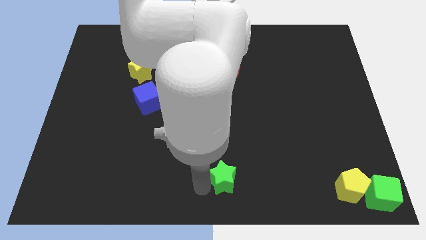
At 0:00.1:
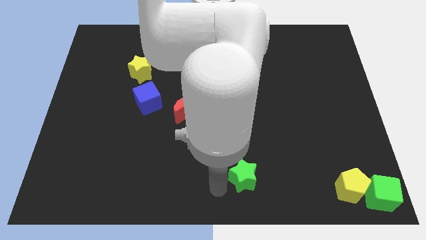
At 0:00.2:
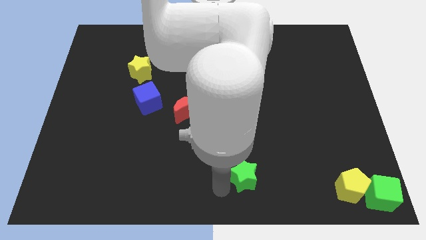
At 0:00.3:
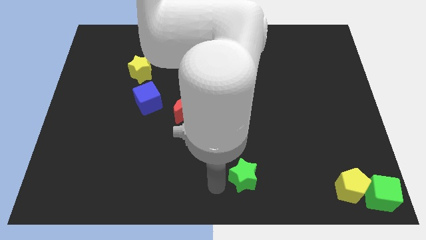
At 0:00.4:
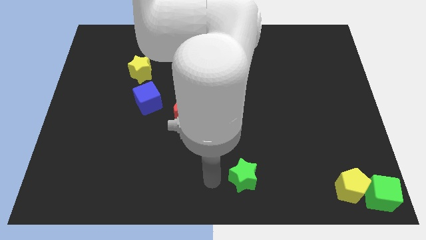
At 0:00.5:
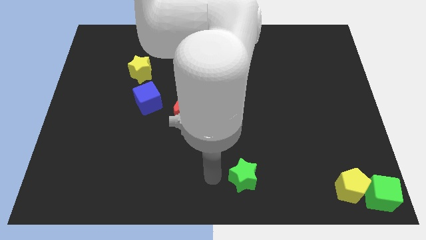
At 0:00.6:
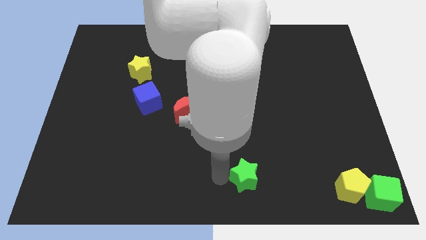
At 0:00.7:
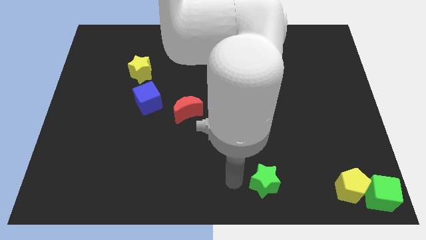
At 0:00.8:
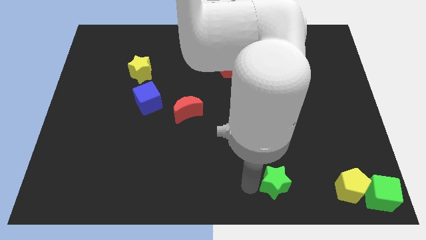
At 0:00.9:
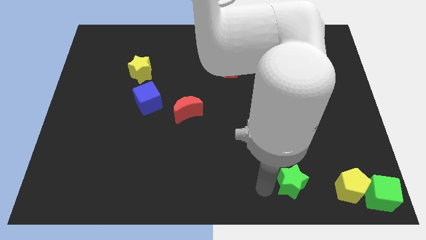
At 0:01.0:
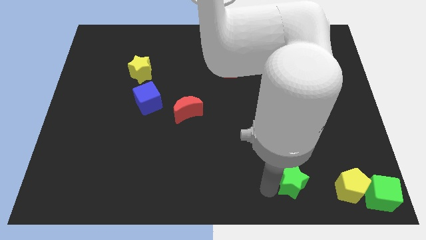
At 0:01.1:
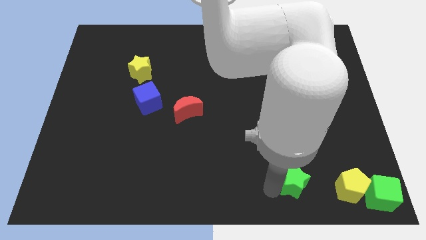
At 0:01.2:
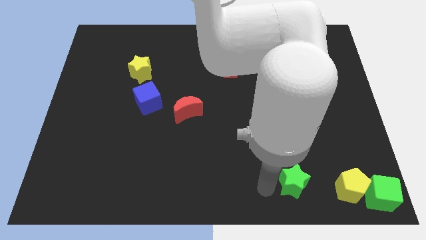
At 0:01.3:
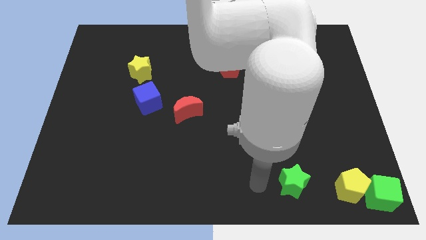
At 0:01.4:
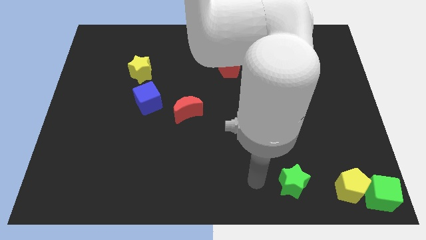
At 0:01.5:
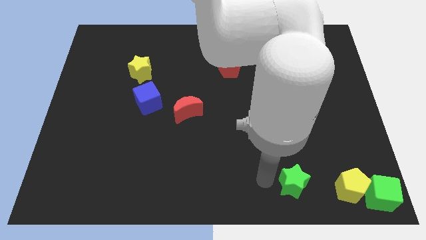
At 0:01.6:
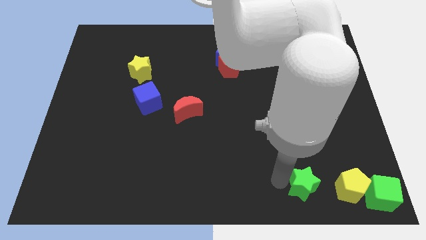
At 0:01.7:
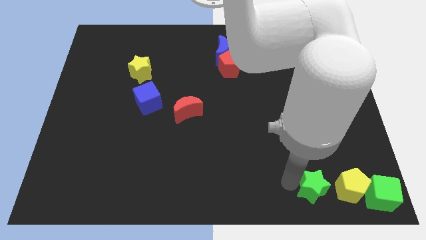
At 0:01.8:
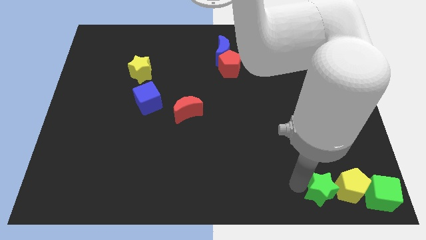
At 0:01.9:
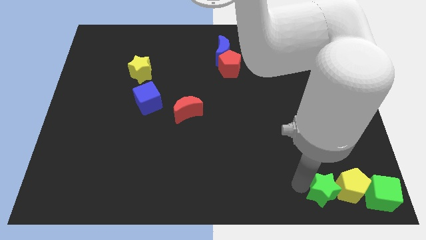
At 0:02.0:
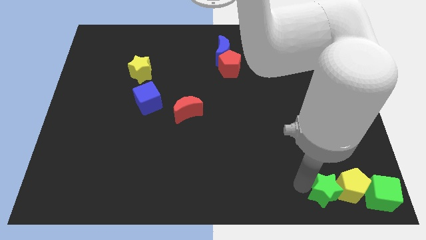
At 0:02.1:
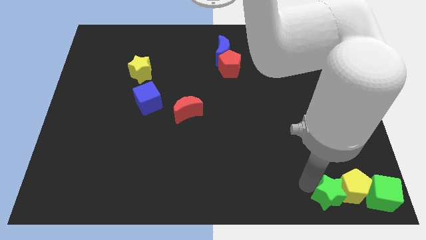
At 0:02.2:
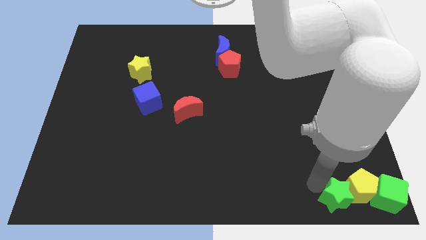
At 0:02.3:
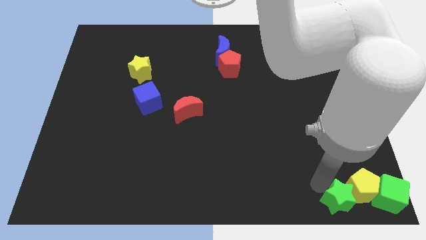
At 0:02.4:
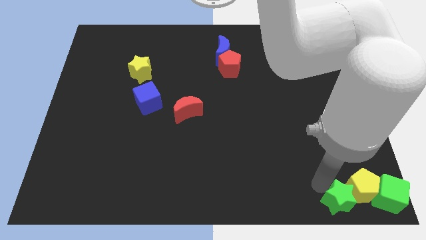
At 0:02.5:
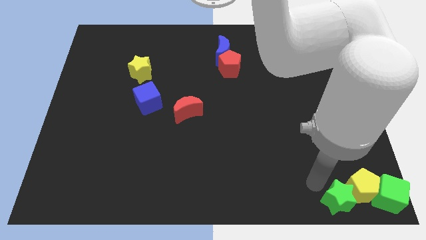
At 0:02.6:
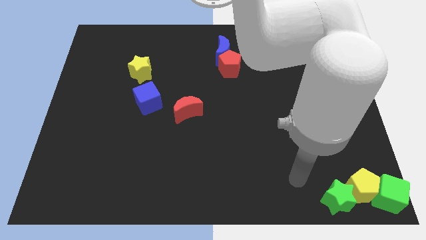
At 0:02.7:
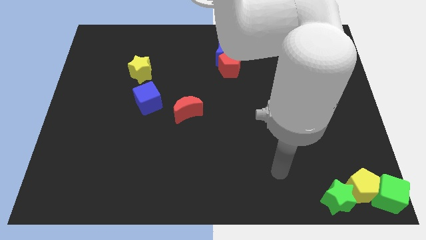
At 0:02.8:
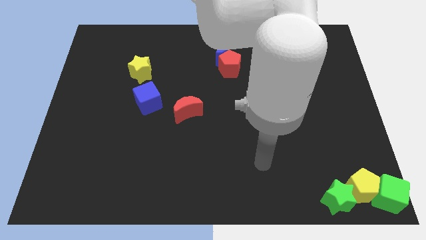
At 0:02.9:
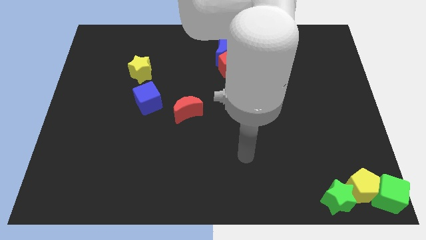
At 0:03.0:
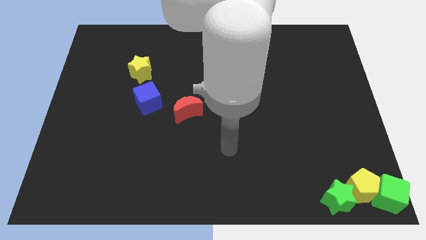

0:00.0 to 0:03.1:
place green star beside yellow pentagon

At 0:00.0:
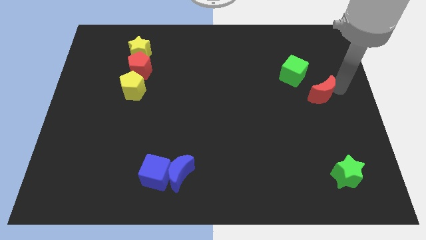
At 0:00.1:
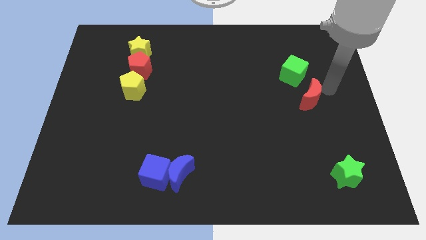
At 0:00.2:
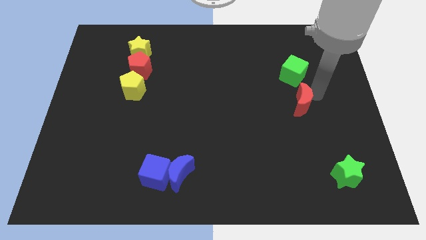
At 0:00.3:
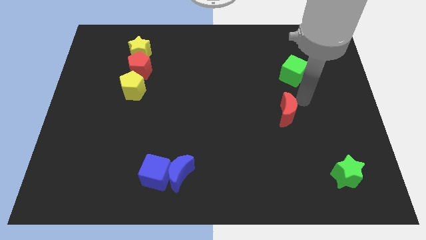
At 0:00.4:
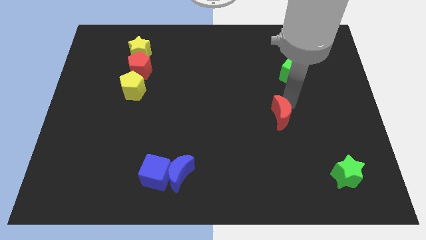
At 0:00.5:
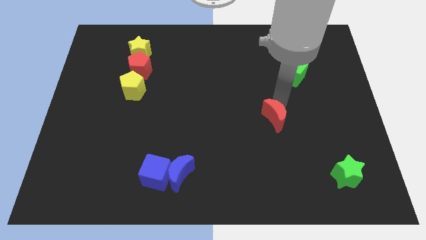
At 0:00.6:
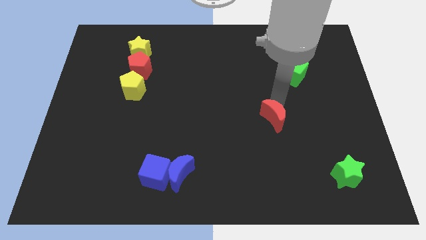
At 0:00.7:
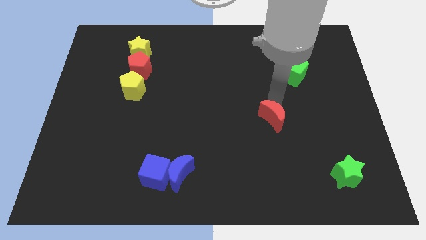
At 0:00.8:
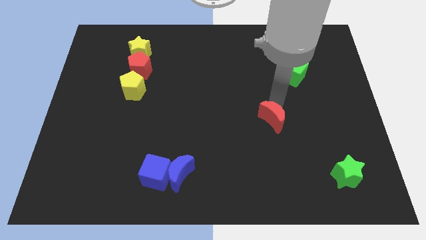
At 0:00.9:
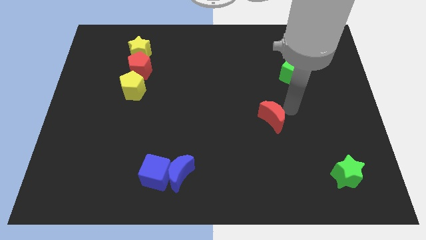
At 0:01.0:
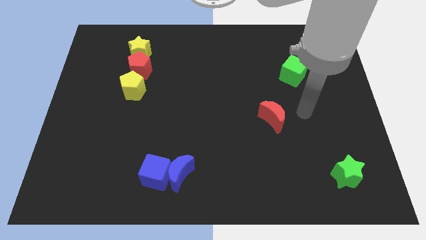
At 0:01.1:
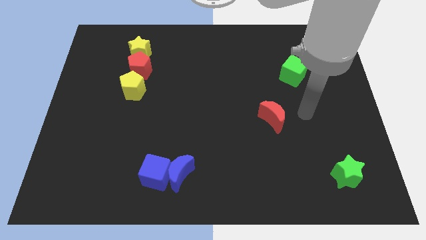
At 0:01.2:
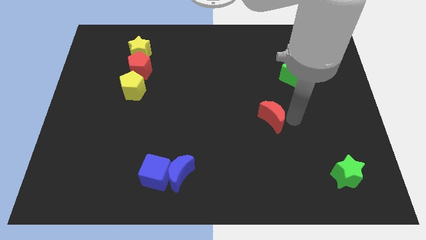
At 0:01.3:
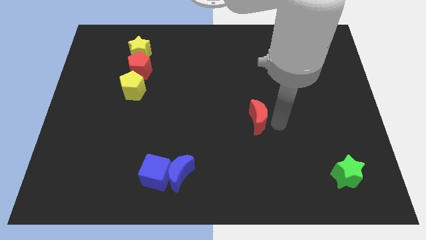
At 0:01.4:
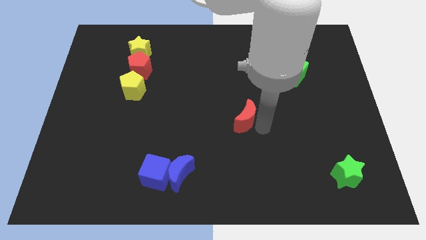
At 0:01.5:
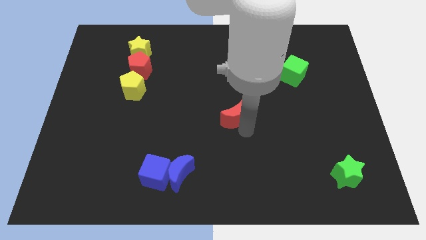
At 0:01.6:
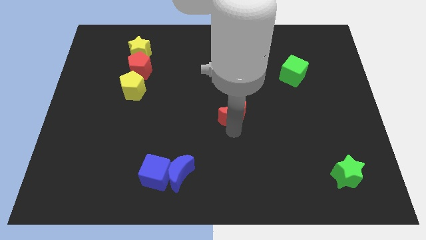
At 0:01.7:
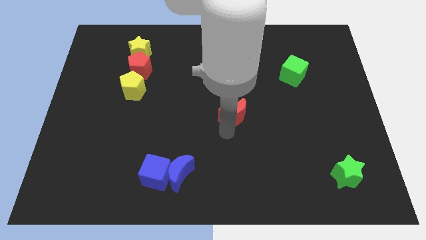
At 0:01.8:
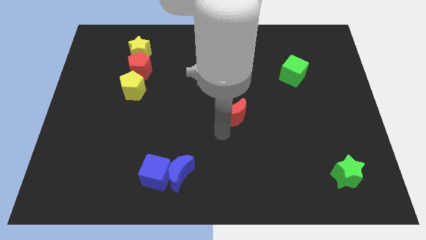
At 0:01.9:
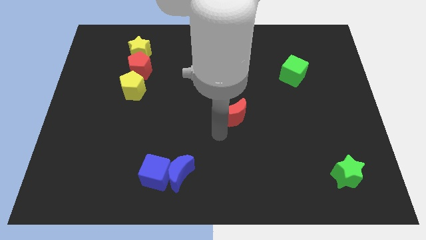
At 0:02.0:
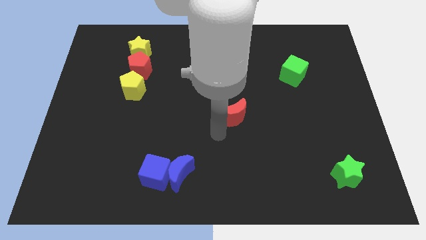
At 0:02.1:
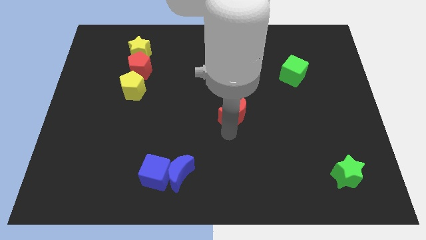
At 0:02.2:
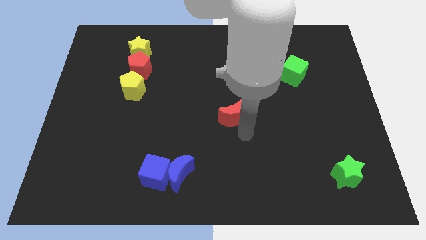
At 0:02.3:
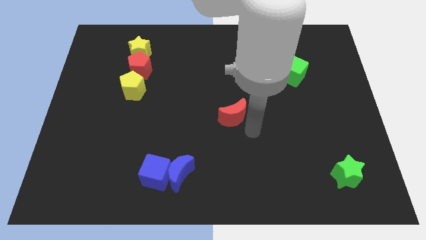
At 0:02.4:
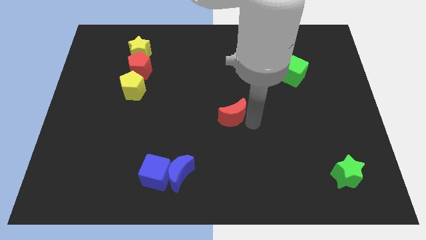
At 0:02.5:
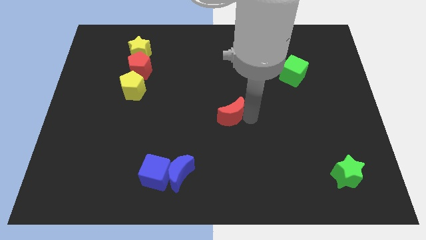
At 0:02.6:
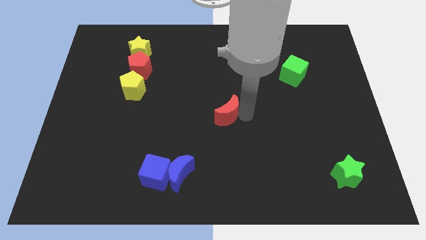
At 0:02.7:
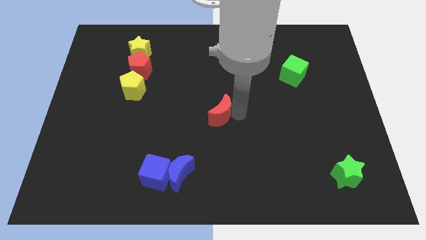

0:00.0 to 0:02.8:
move the red crescent to the center of the board

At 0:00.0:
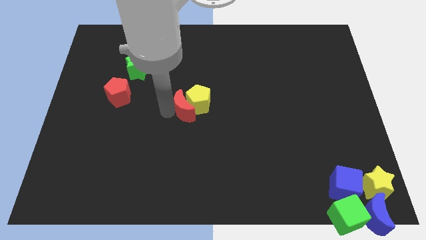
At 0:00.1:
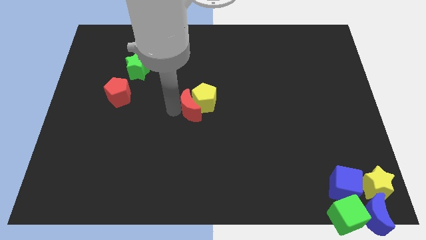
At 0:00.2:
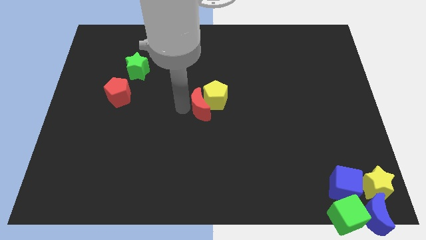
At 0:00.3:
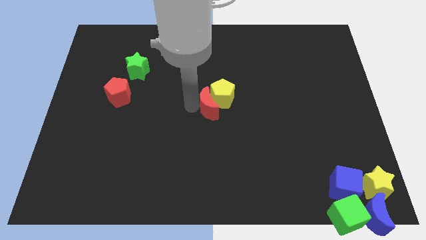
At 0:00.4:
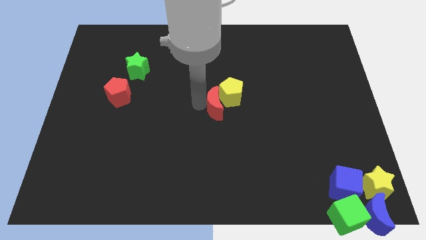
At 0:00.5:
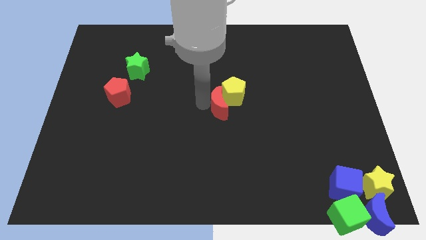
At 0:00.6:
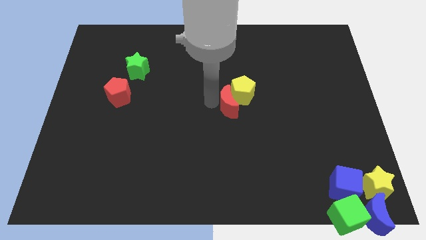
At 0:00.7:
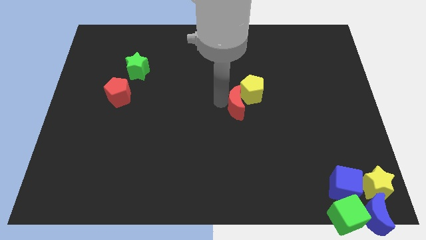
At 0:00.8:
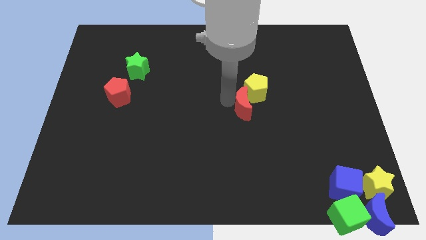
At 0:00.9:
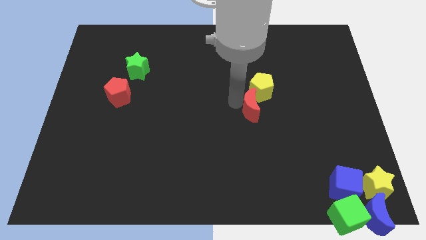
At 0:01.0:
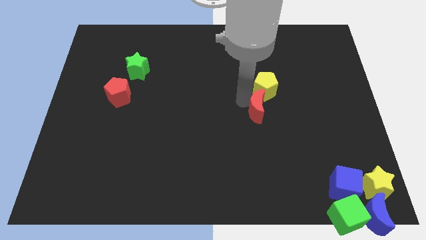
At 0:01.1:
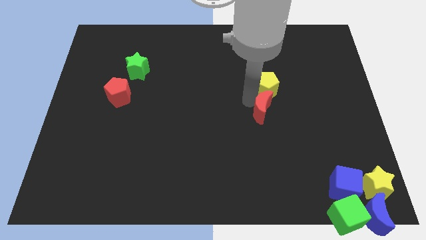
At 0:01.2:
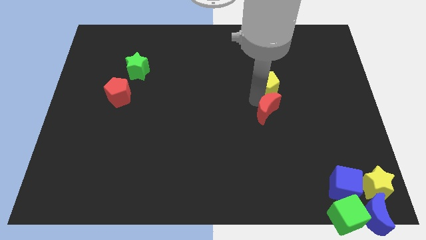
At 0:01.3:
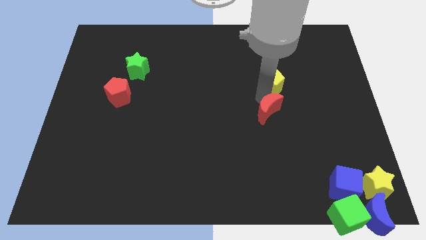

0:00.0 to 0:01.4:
put the red crescent vertically below the yellow pentagon

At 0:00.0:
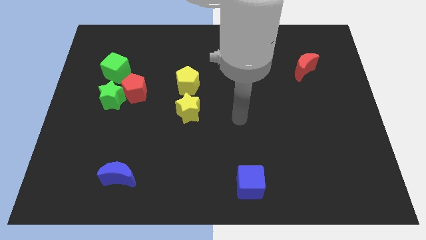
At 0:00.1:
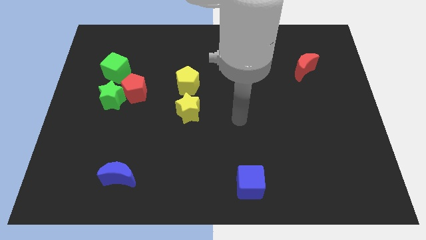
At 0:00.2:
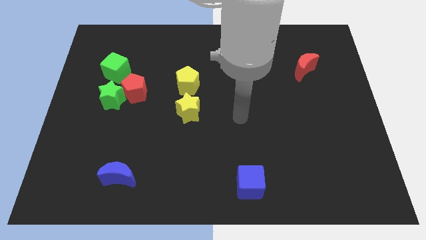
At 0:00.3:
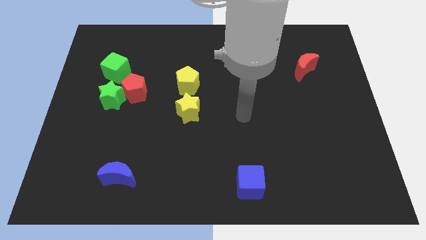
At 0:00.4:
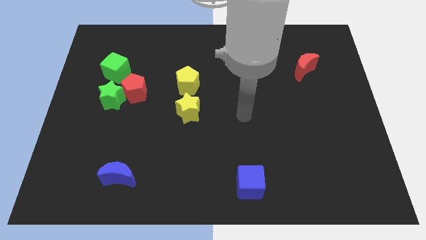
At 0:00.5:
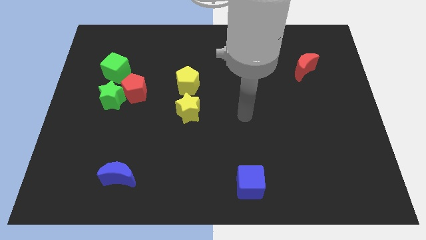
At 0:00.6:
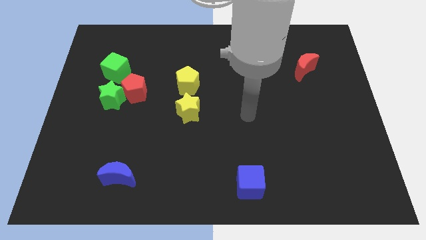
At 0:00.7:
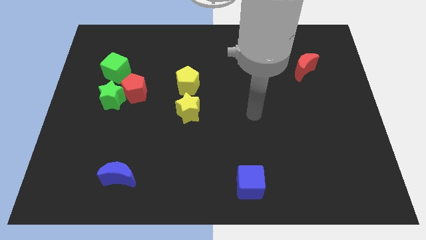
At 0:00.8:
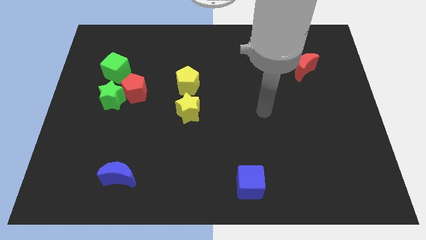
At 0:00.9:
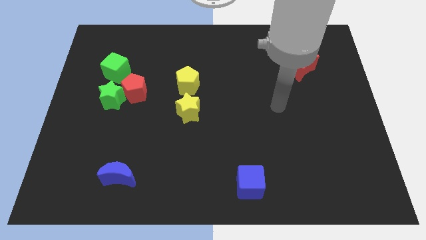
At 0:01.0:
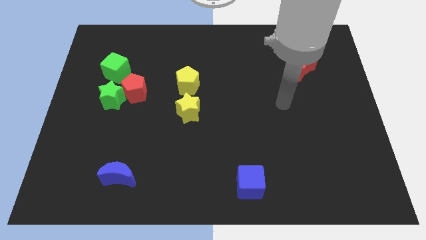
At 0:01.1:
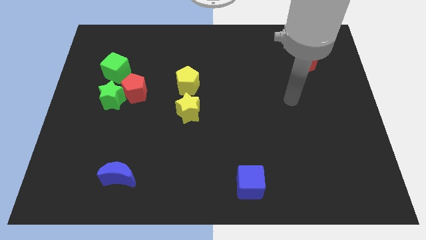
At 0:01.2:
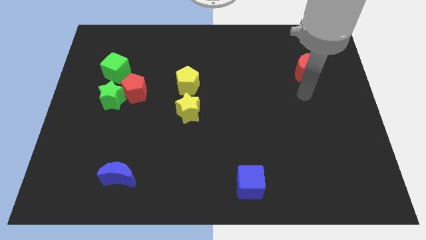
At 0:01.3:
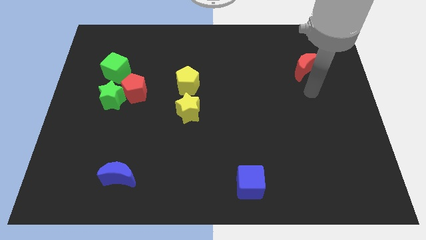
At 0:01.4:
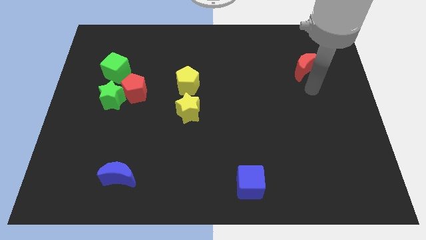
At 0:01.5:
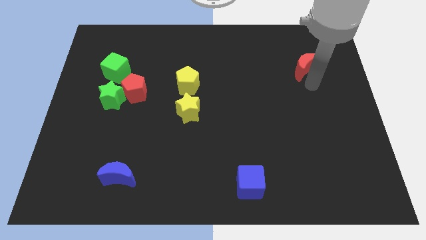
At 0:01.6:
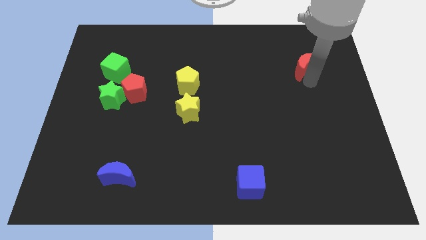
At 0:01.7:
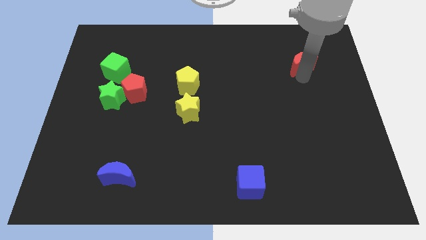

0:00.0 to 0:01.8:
place your arm to the bottom of red moon

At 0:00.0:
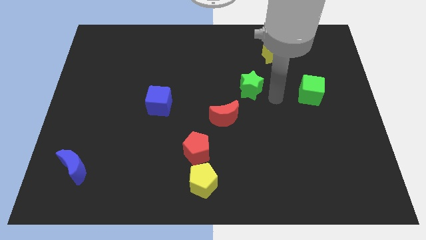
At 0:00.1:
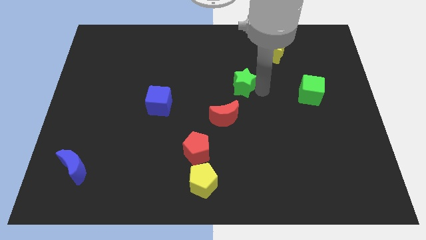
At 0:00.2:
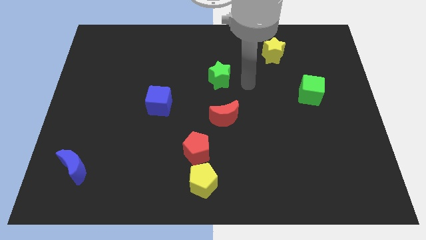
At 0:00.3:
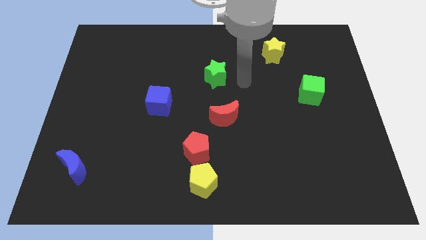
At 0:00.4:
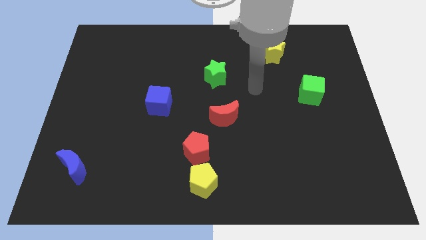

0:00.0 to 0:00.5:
move the green star above to the red crescent
